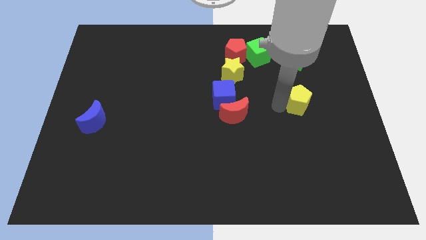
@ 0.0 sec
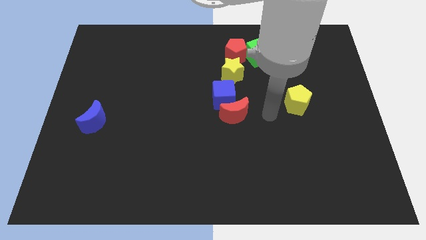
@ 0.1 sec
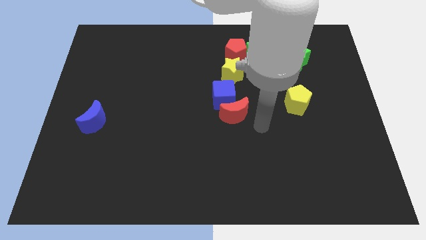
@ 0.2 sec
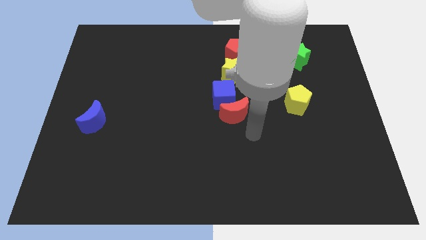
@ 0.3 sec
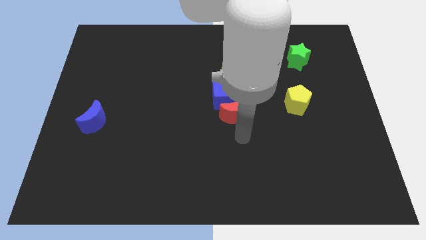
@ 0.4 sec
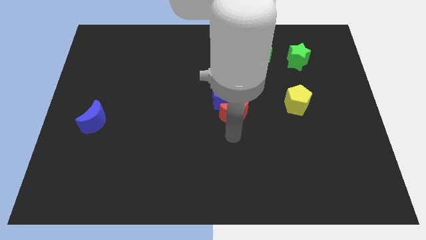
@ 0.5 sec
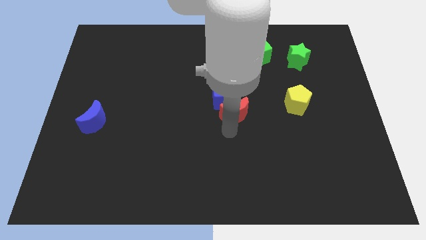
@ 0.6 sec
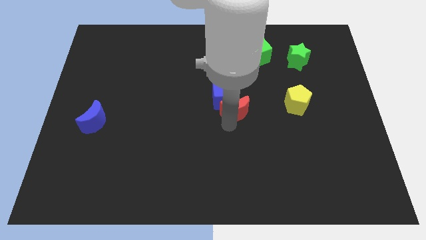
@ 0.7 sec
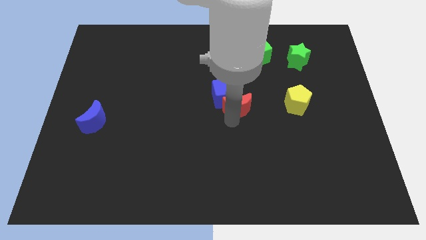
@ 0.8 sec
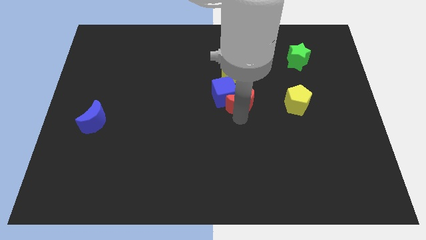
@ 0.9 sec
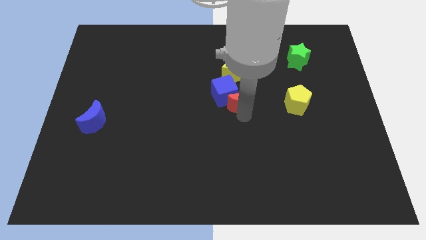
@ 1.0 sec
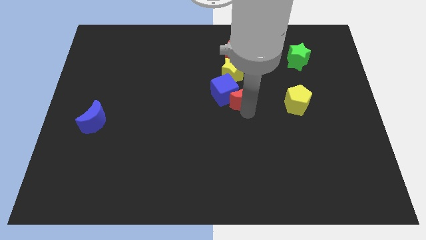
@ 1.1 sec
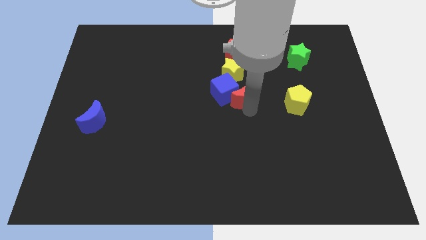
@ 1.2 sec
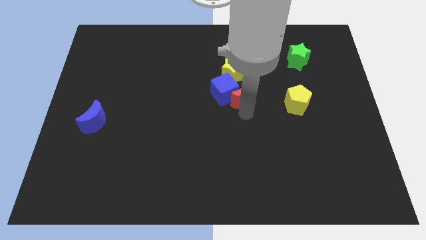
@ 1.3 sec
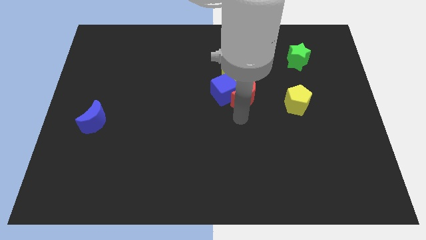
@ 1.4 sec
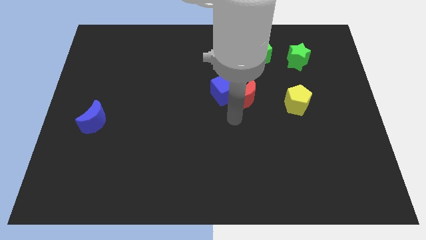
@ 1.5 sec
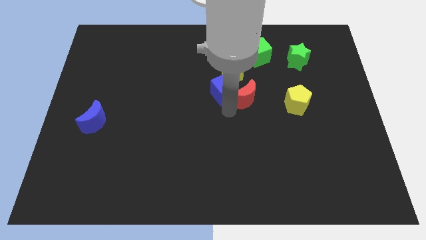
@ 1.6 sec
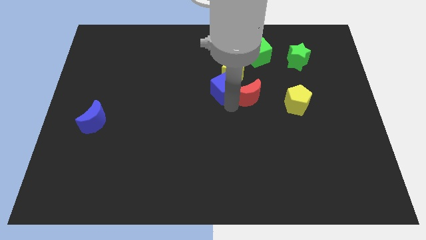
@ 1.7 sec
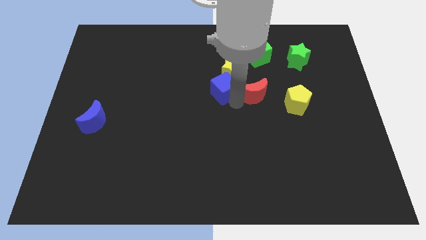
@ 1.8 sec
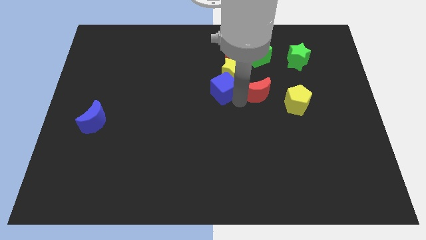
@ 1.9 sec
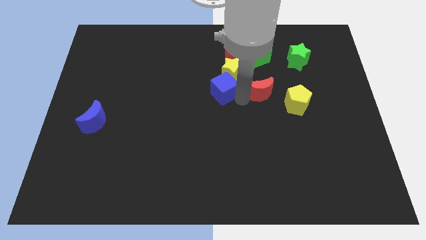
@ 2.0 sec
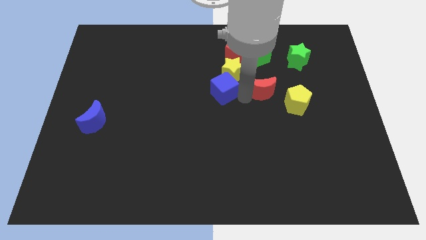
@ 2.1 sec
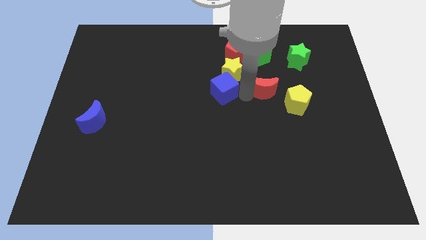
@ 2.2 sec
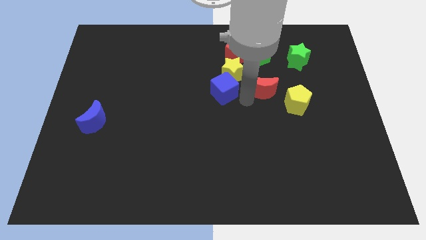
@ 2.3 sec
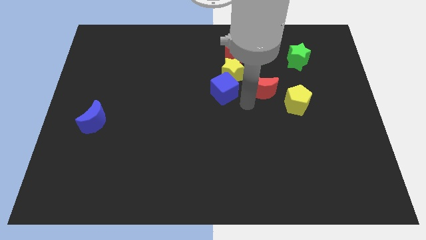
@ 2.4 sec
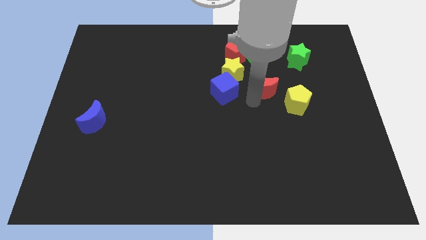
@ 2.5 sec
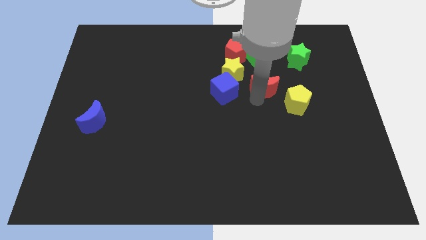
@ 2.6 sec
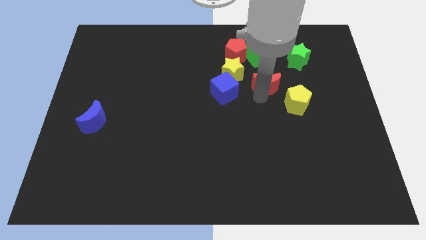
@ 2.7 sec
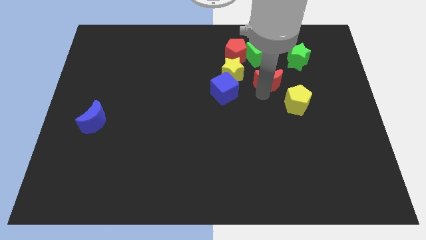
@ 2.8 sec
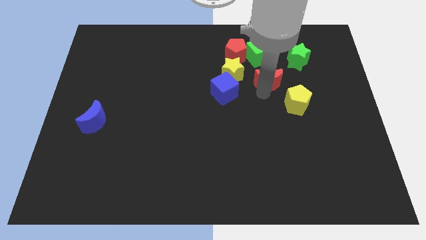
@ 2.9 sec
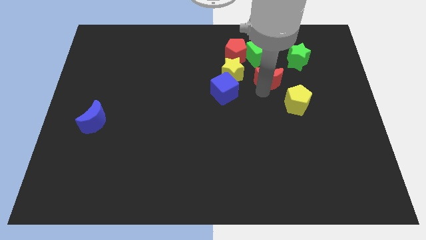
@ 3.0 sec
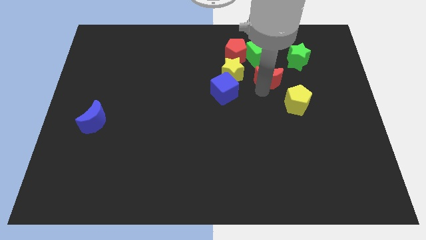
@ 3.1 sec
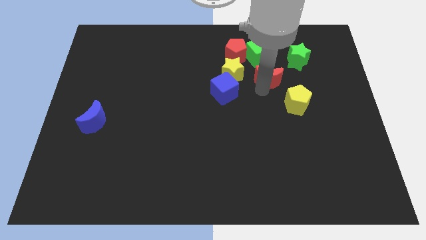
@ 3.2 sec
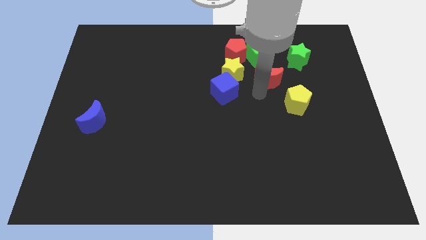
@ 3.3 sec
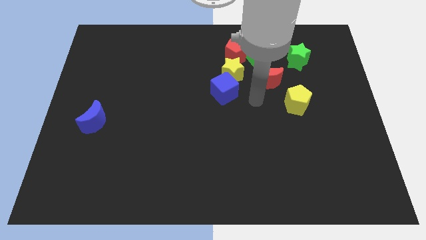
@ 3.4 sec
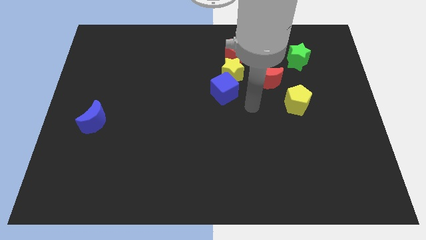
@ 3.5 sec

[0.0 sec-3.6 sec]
push the red crescent to the top

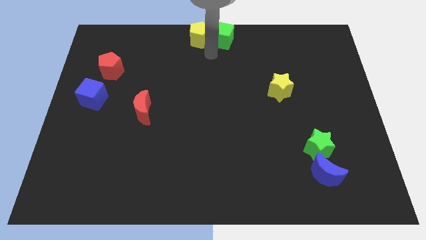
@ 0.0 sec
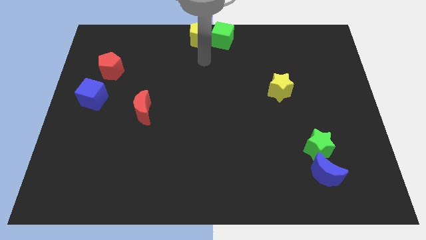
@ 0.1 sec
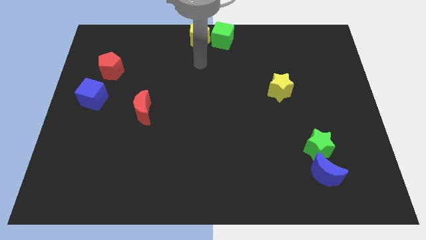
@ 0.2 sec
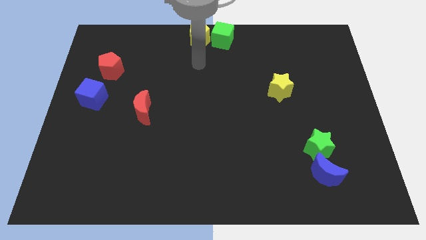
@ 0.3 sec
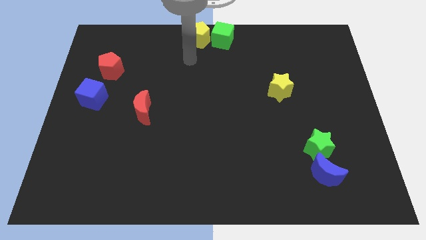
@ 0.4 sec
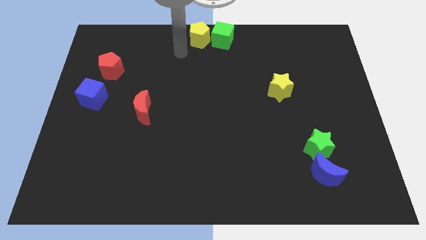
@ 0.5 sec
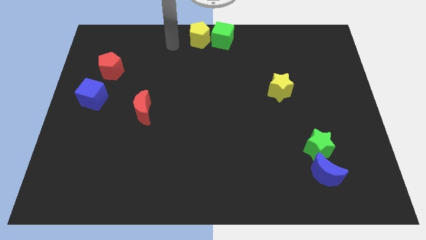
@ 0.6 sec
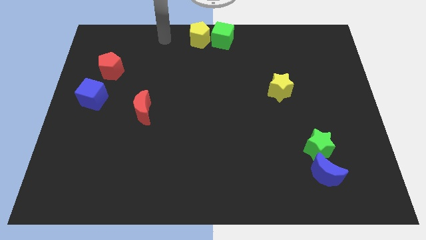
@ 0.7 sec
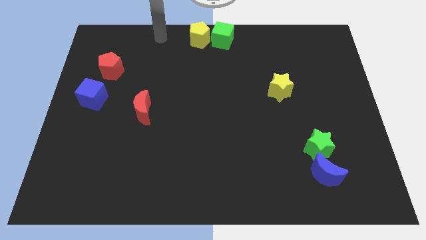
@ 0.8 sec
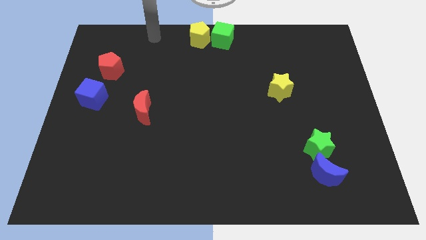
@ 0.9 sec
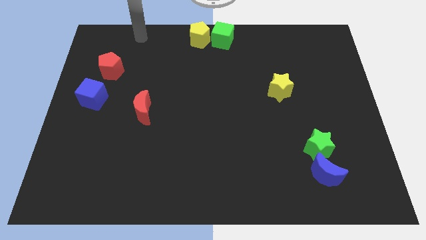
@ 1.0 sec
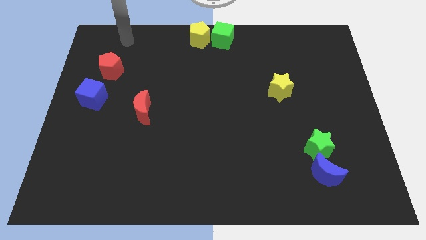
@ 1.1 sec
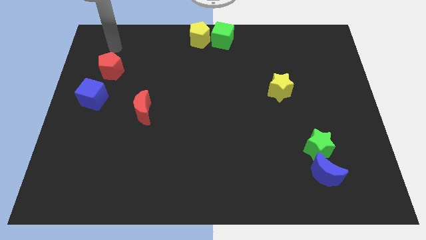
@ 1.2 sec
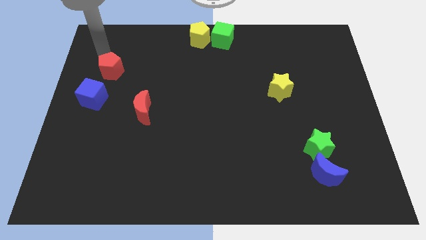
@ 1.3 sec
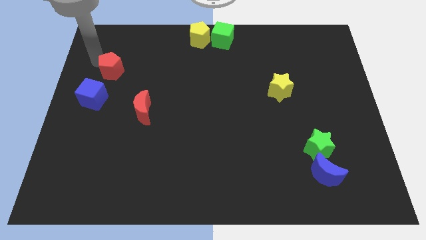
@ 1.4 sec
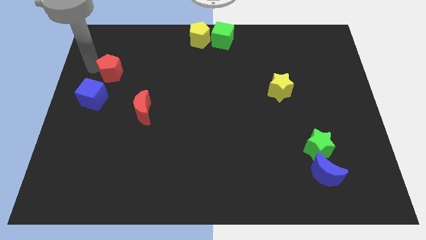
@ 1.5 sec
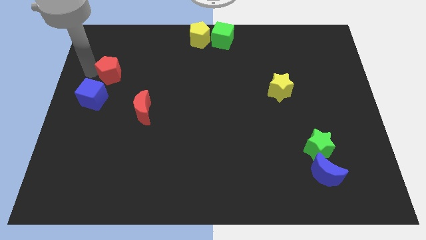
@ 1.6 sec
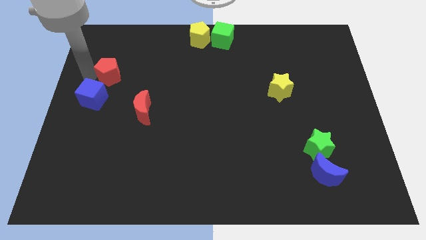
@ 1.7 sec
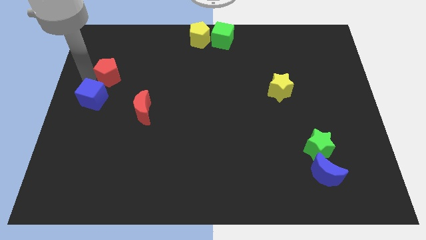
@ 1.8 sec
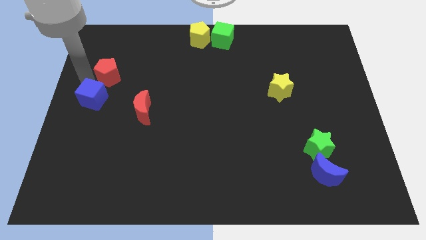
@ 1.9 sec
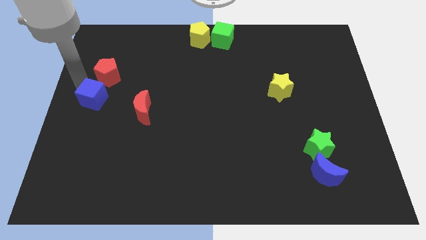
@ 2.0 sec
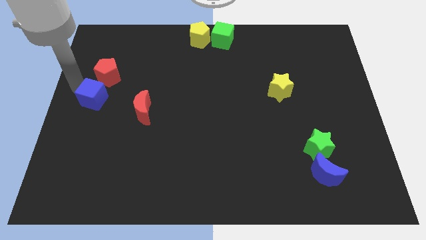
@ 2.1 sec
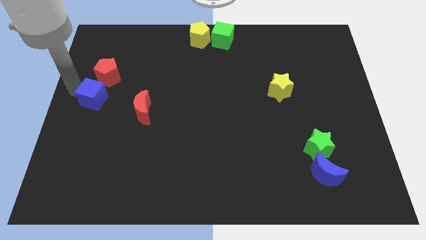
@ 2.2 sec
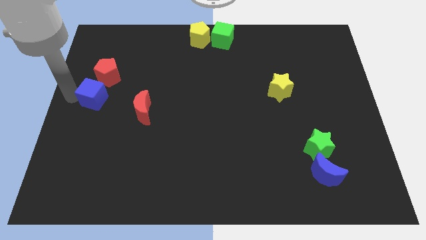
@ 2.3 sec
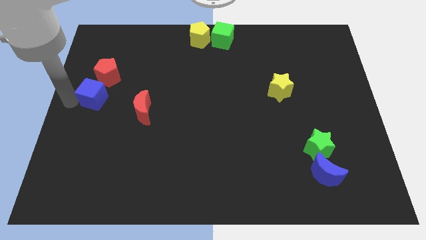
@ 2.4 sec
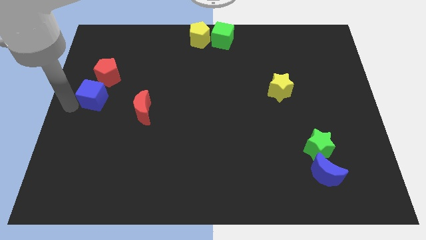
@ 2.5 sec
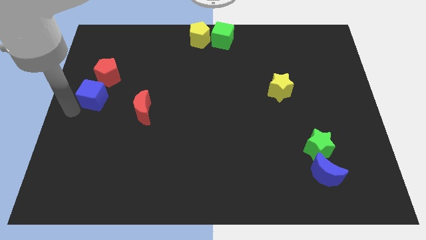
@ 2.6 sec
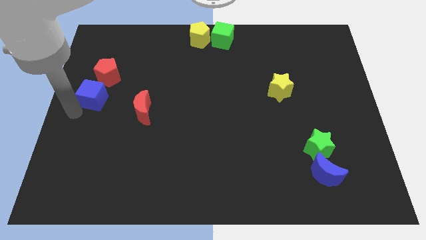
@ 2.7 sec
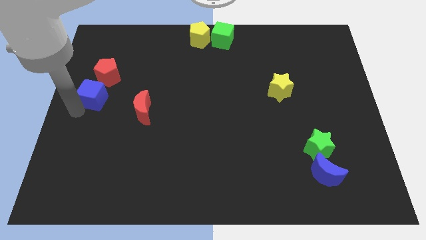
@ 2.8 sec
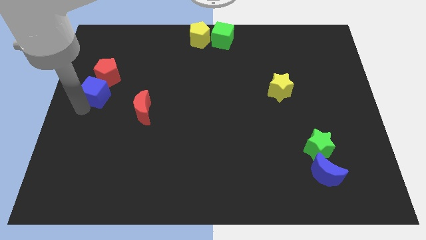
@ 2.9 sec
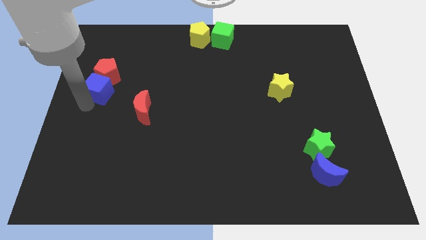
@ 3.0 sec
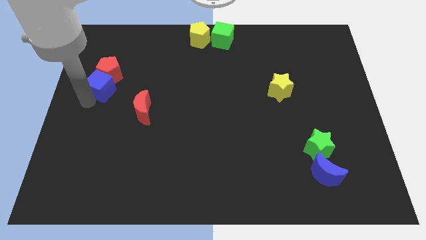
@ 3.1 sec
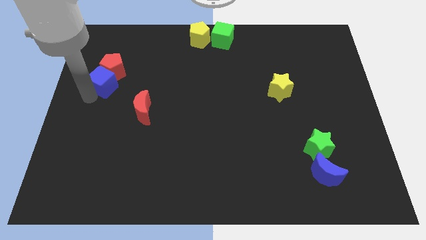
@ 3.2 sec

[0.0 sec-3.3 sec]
move the blue cube into red pentagon

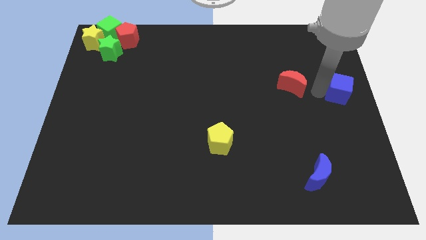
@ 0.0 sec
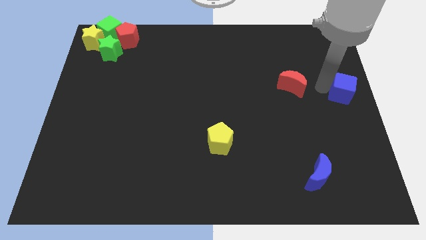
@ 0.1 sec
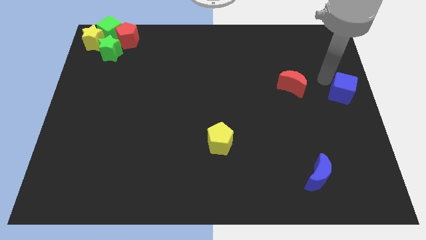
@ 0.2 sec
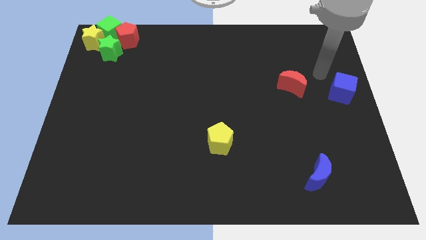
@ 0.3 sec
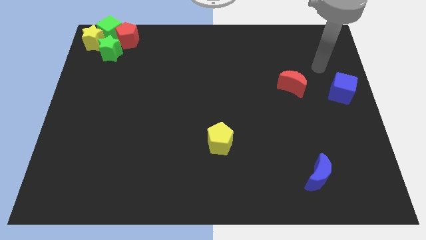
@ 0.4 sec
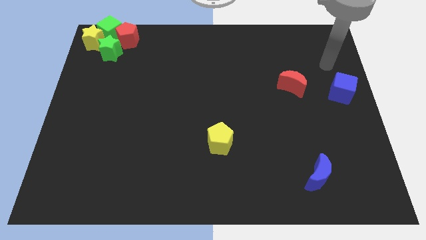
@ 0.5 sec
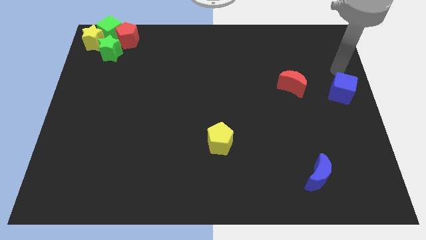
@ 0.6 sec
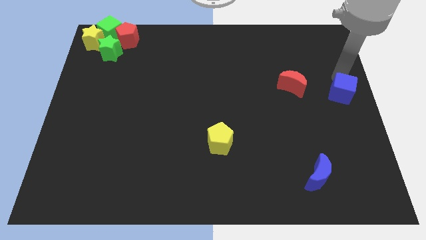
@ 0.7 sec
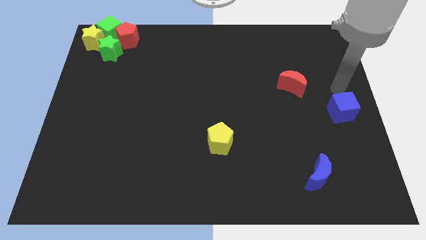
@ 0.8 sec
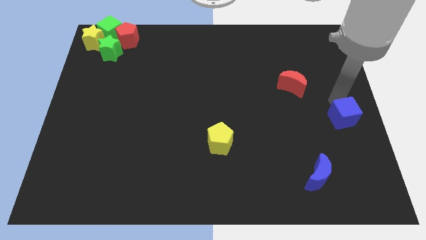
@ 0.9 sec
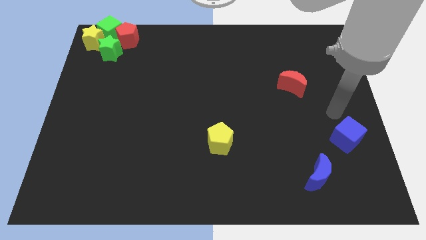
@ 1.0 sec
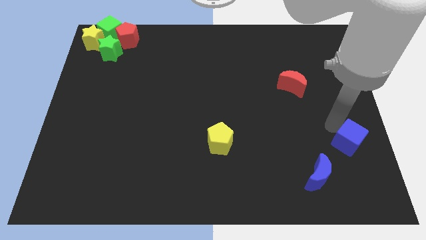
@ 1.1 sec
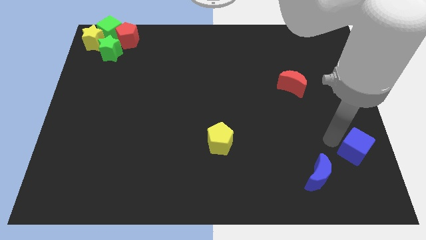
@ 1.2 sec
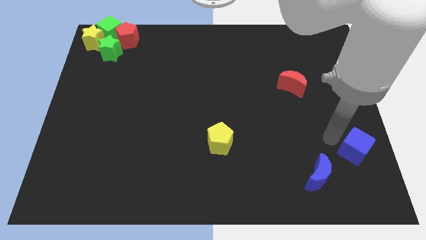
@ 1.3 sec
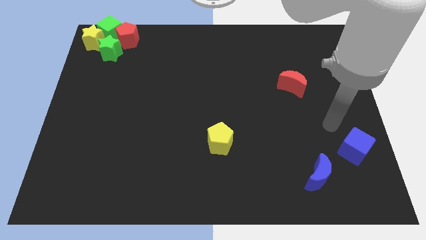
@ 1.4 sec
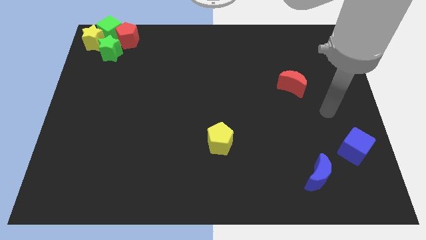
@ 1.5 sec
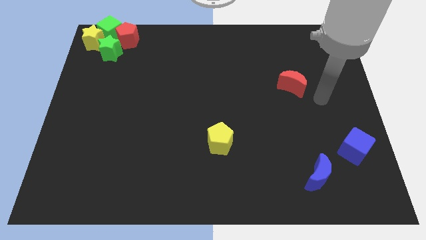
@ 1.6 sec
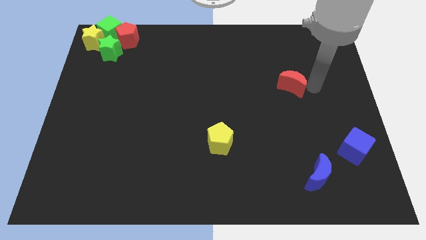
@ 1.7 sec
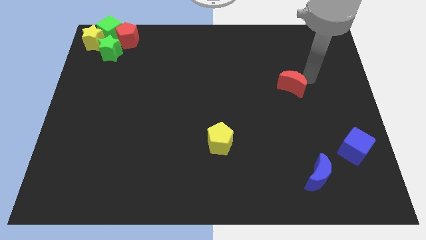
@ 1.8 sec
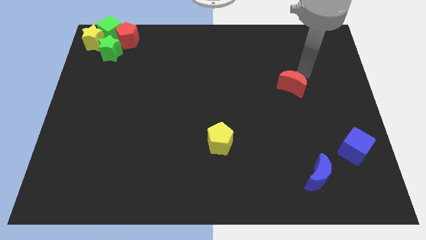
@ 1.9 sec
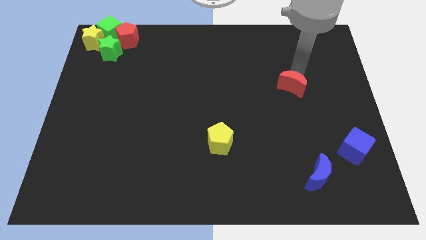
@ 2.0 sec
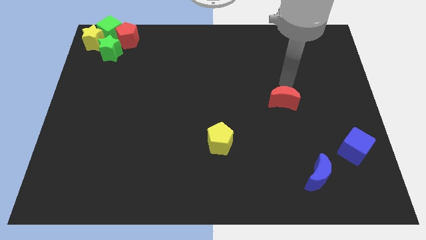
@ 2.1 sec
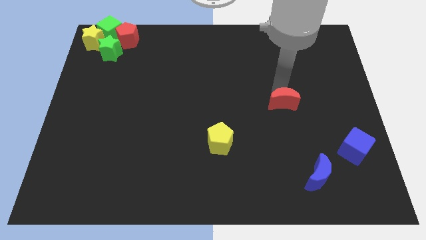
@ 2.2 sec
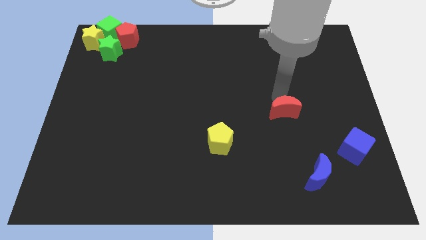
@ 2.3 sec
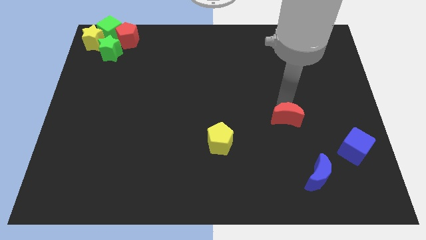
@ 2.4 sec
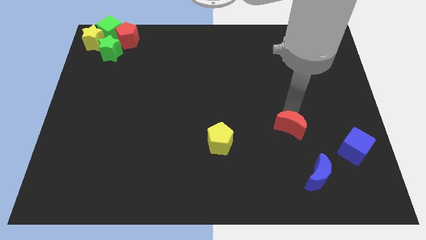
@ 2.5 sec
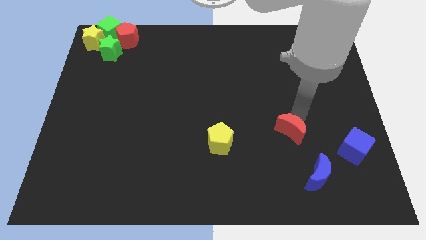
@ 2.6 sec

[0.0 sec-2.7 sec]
slide the blue cube and red moon towards the bottom of the board
